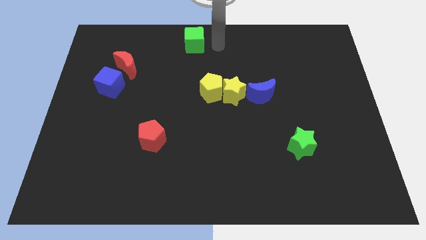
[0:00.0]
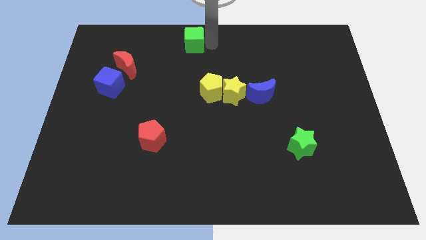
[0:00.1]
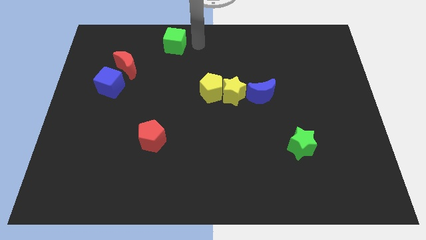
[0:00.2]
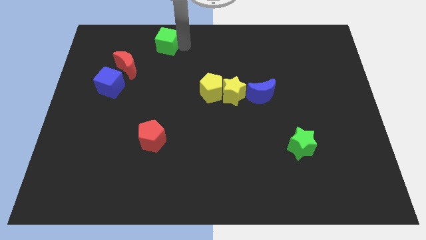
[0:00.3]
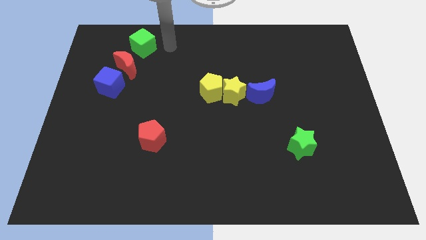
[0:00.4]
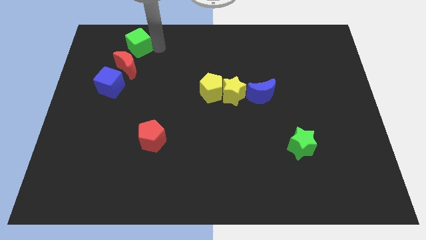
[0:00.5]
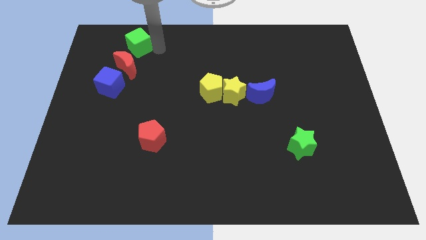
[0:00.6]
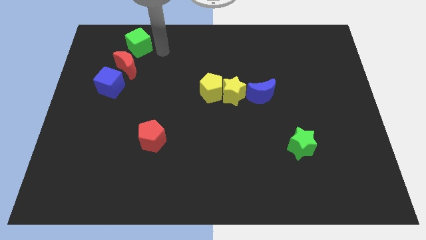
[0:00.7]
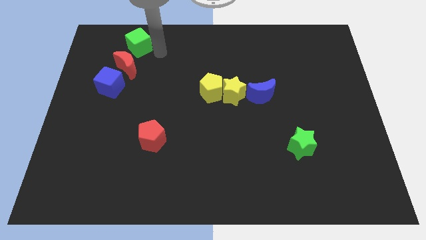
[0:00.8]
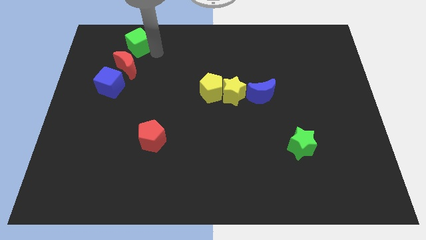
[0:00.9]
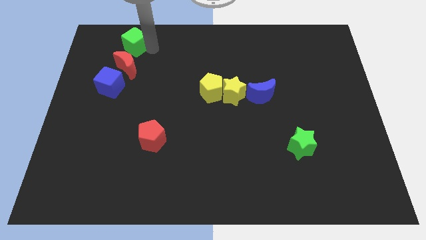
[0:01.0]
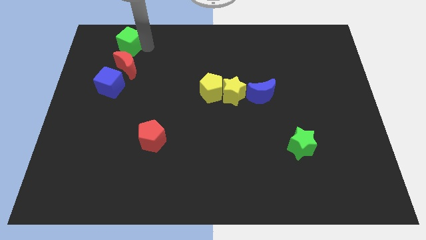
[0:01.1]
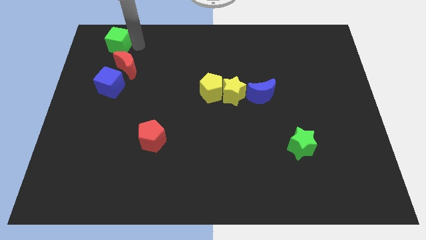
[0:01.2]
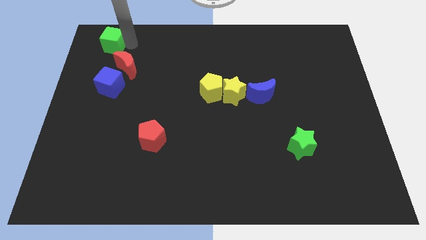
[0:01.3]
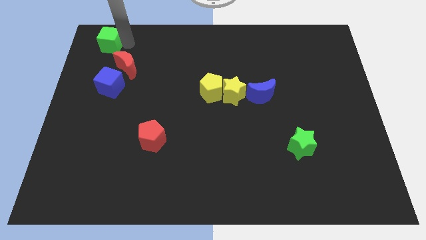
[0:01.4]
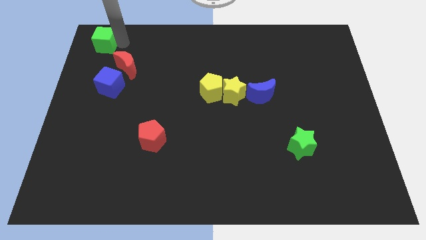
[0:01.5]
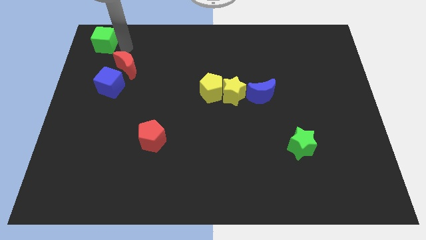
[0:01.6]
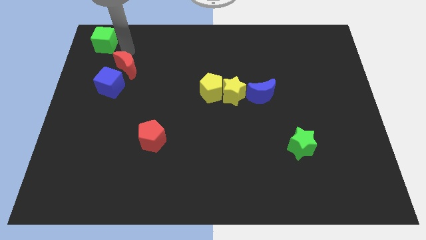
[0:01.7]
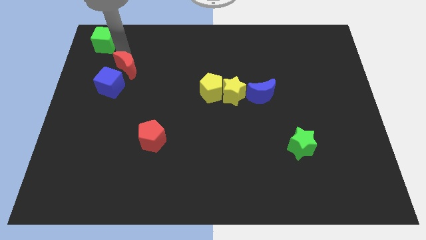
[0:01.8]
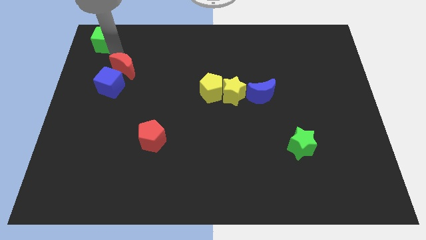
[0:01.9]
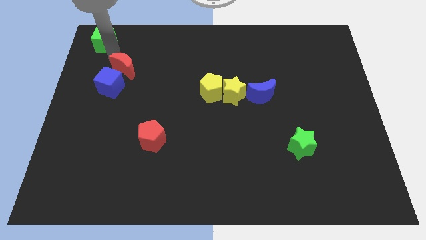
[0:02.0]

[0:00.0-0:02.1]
move the green cube to the left side

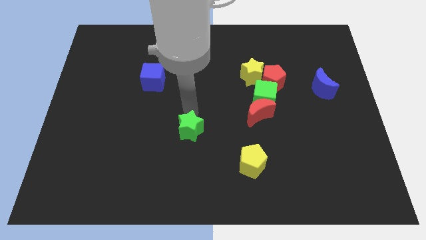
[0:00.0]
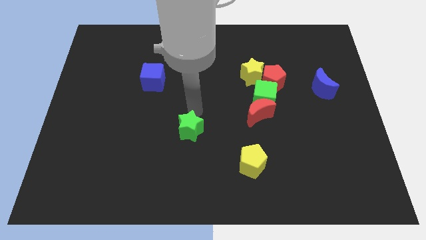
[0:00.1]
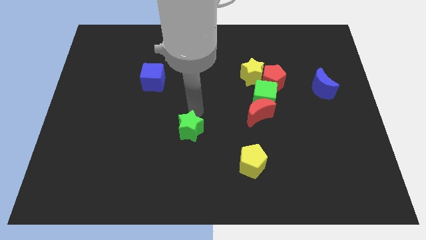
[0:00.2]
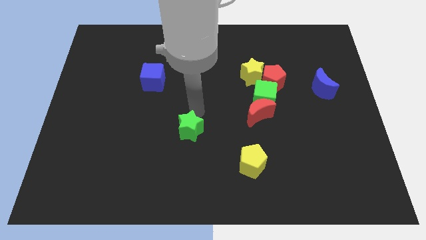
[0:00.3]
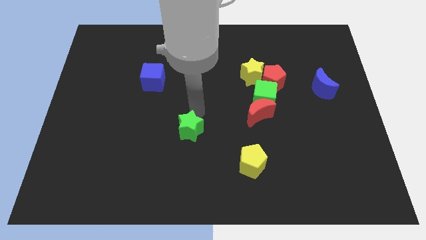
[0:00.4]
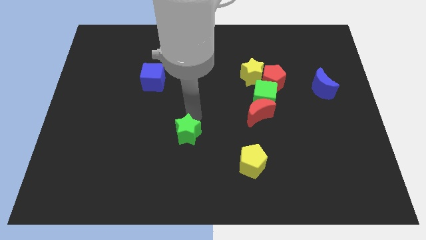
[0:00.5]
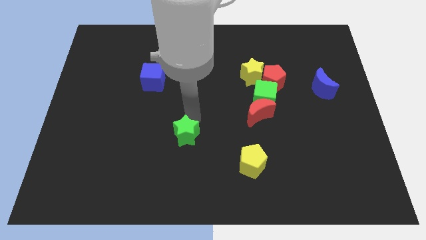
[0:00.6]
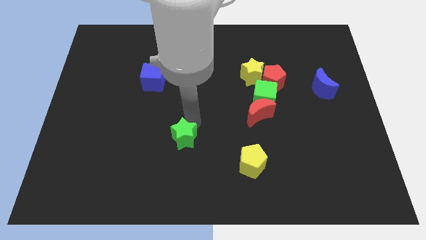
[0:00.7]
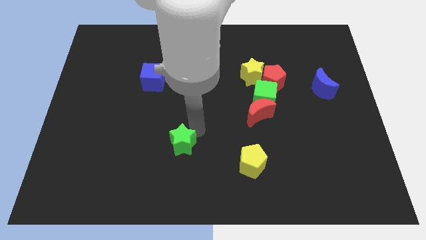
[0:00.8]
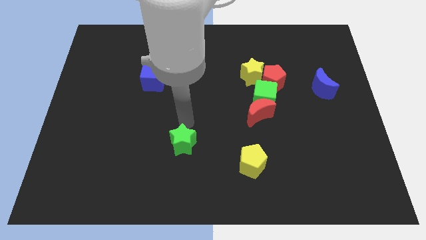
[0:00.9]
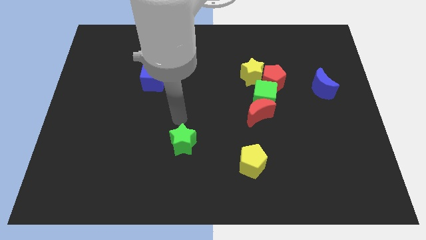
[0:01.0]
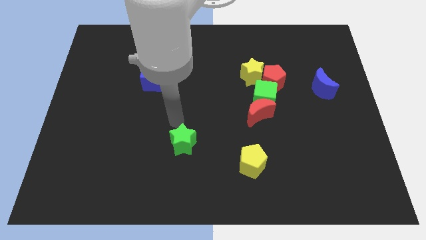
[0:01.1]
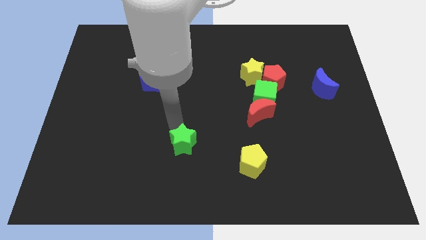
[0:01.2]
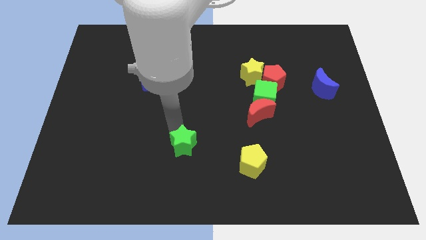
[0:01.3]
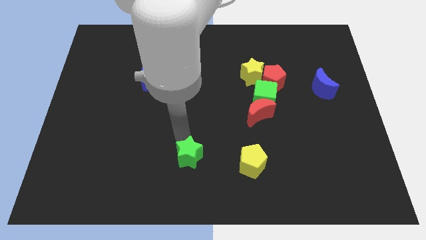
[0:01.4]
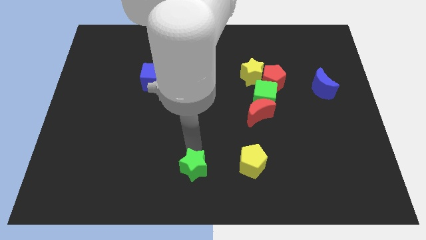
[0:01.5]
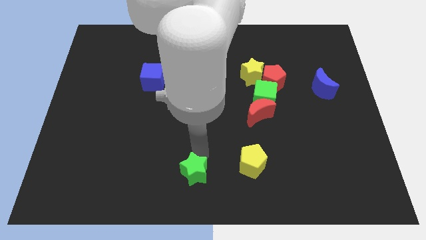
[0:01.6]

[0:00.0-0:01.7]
push the green star downwards

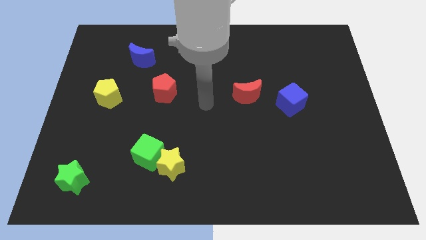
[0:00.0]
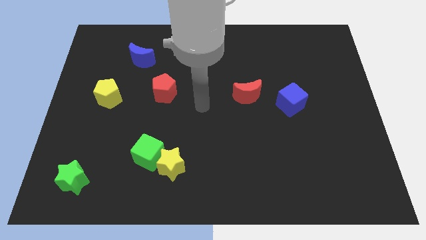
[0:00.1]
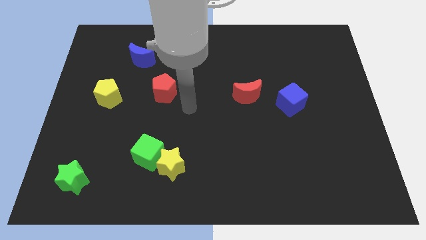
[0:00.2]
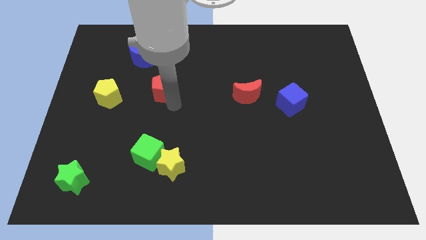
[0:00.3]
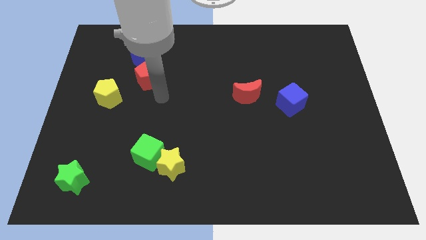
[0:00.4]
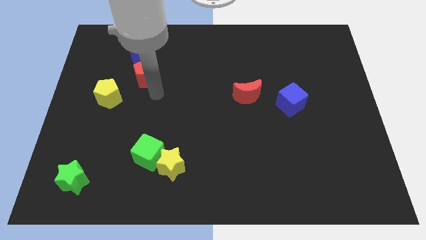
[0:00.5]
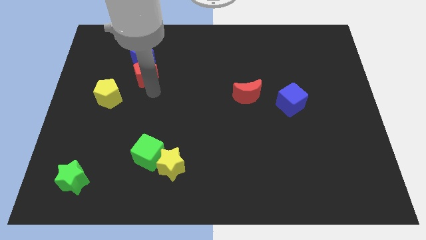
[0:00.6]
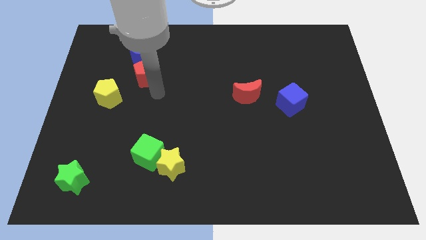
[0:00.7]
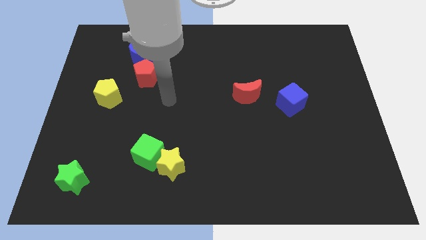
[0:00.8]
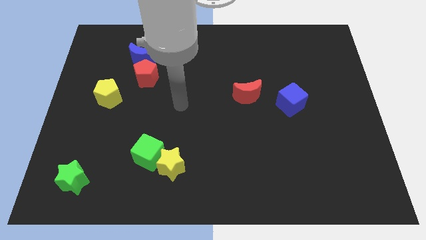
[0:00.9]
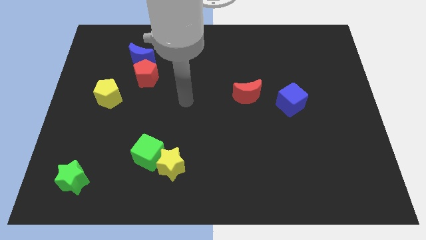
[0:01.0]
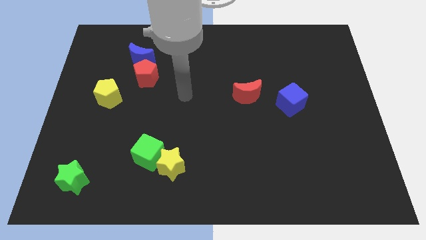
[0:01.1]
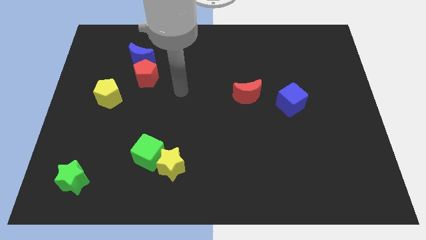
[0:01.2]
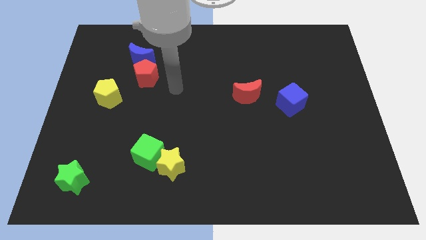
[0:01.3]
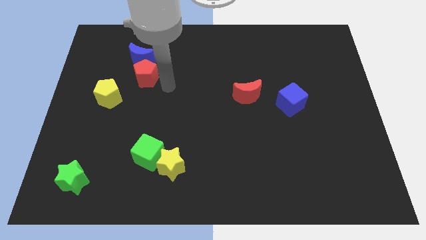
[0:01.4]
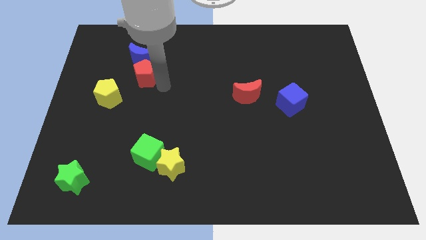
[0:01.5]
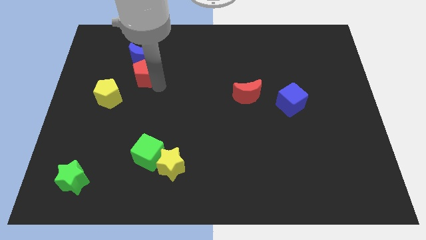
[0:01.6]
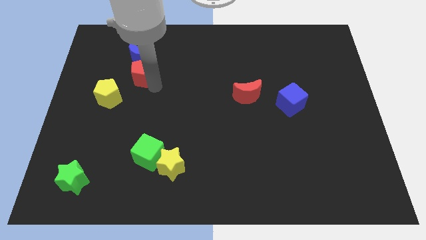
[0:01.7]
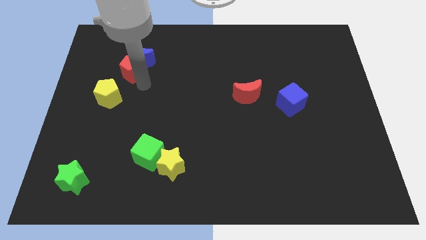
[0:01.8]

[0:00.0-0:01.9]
push the red pentagon in between yellow pentagon and blue crescent

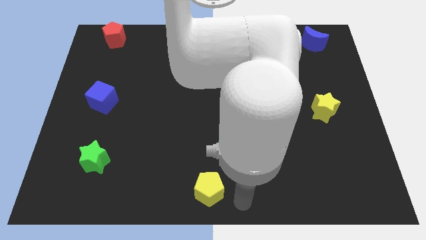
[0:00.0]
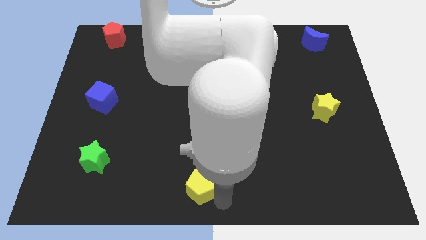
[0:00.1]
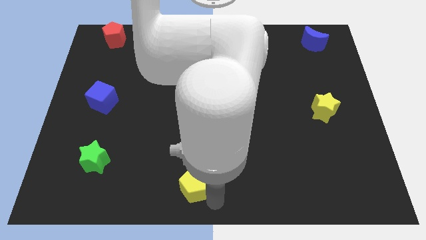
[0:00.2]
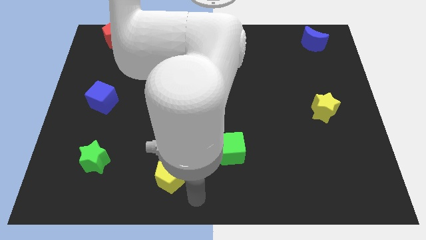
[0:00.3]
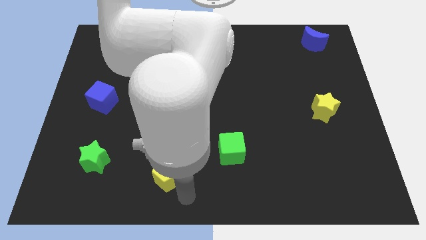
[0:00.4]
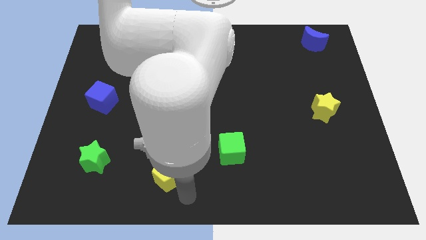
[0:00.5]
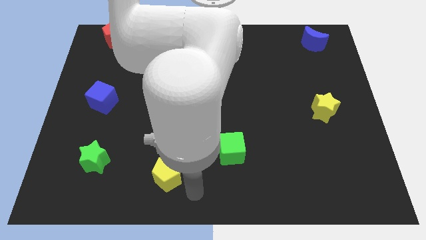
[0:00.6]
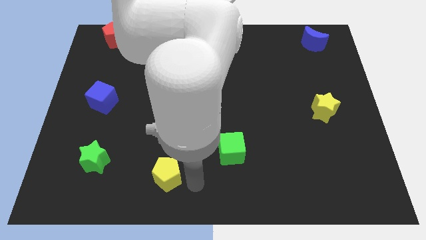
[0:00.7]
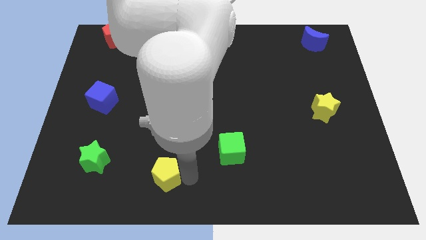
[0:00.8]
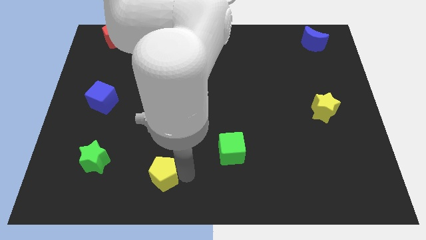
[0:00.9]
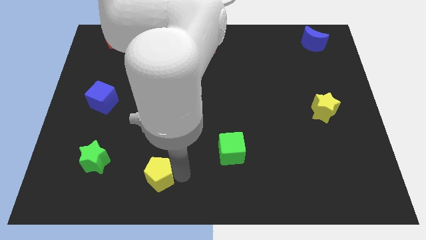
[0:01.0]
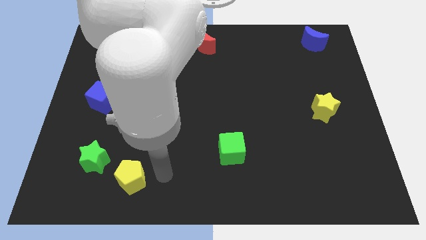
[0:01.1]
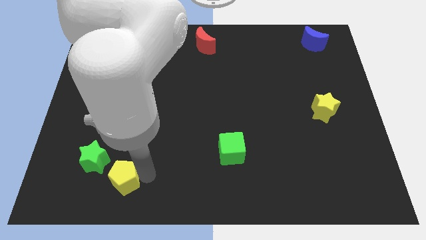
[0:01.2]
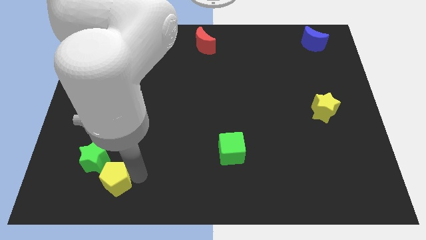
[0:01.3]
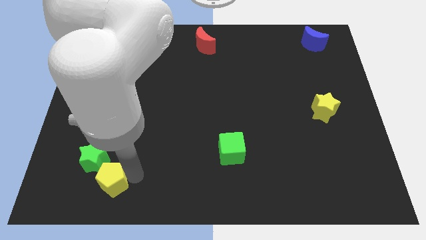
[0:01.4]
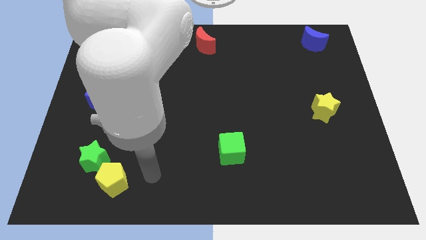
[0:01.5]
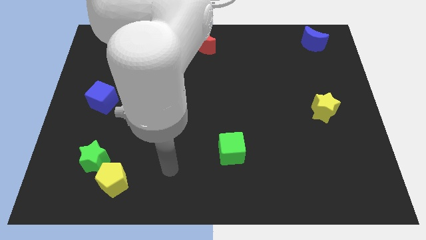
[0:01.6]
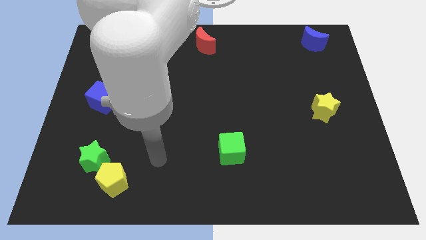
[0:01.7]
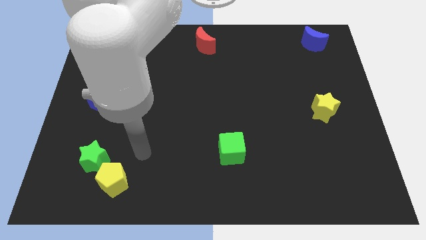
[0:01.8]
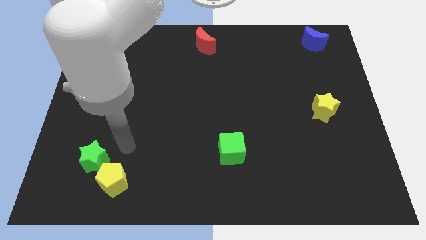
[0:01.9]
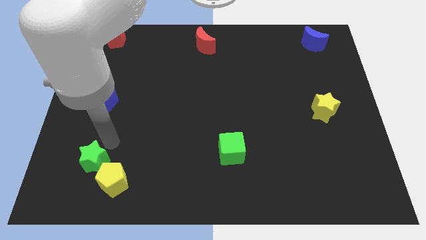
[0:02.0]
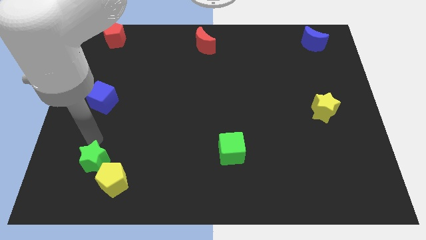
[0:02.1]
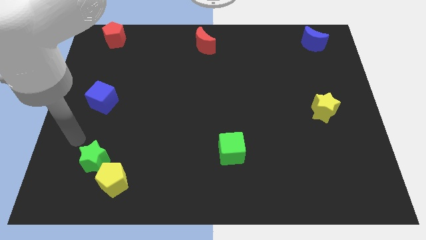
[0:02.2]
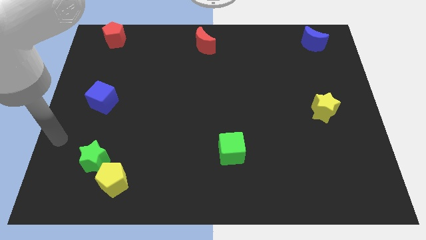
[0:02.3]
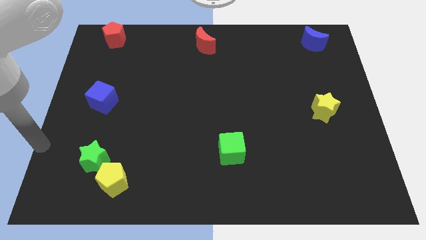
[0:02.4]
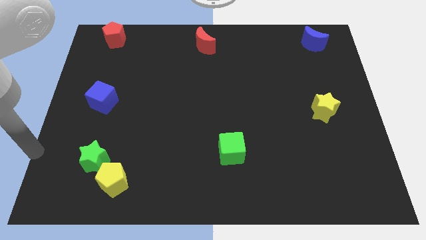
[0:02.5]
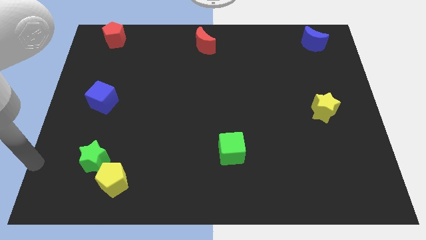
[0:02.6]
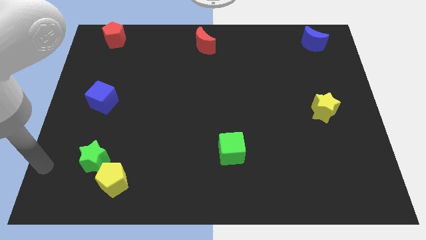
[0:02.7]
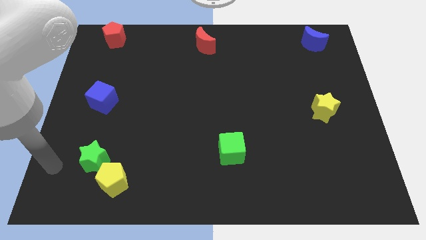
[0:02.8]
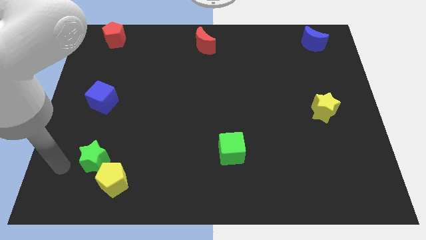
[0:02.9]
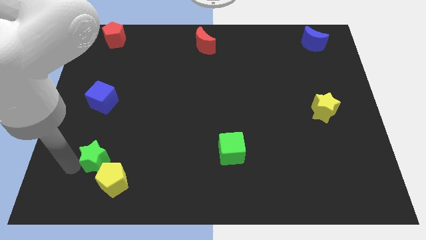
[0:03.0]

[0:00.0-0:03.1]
drag yellow pentagon below green star

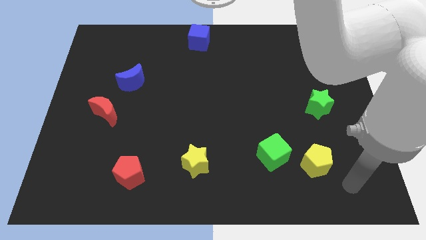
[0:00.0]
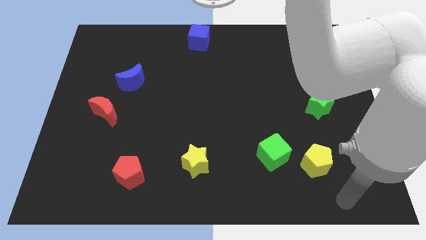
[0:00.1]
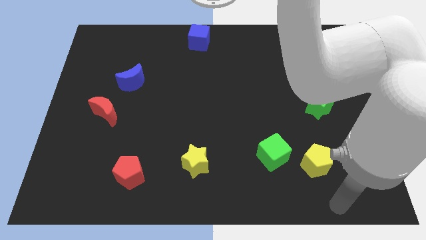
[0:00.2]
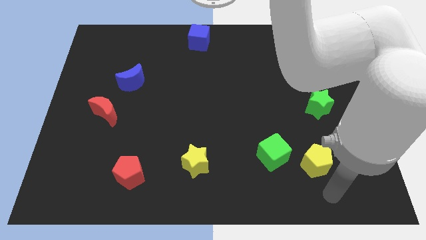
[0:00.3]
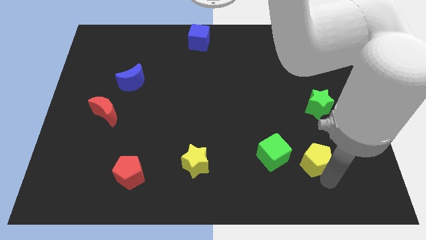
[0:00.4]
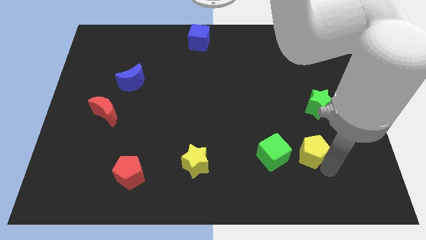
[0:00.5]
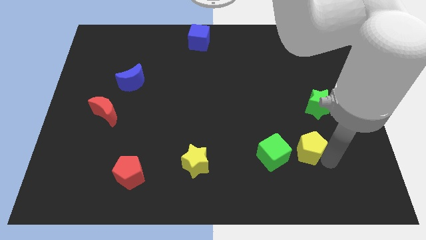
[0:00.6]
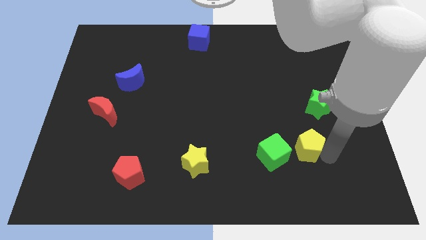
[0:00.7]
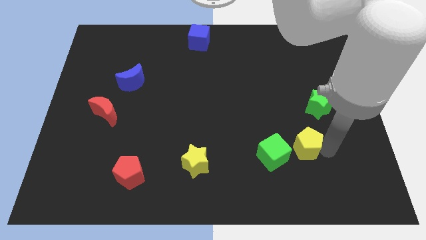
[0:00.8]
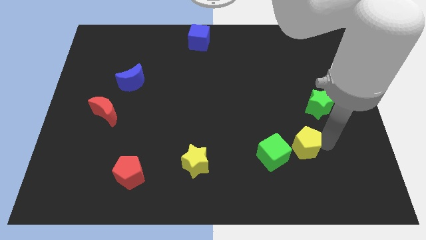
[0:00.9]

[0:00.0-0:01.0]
push the yellow pentagon parallel to the green cube
